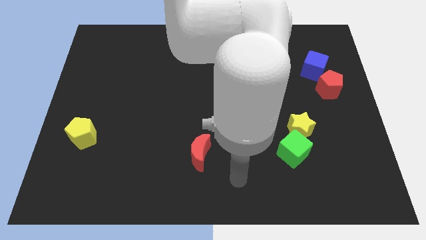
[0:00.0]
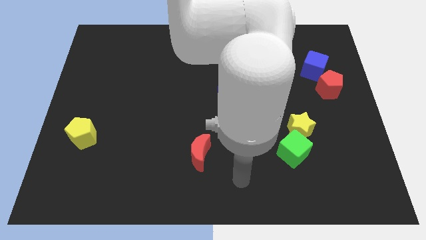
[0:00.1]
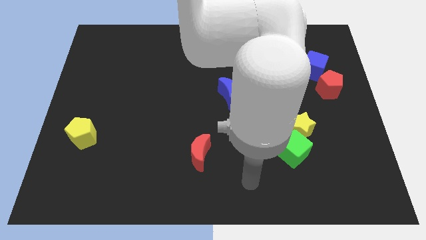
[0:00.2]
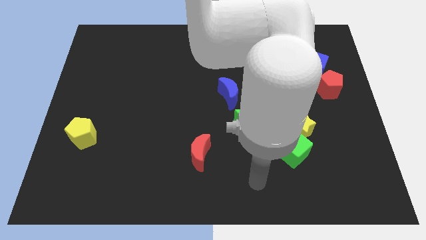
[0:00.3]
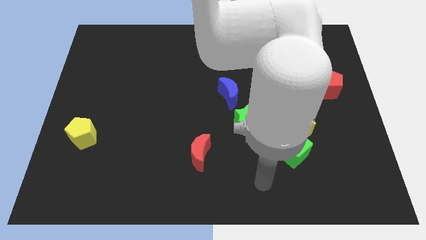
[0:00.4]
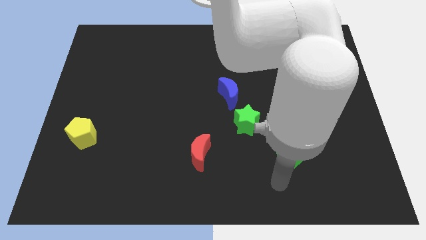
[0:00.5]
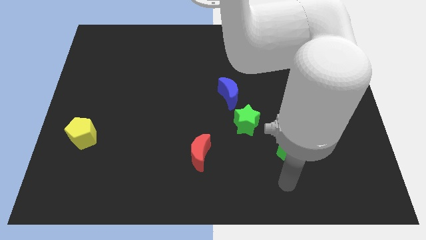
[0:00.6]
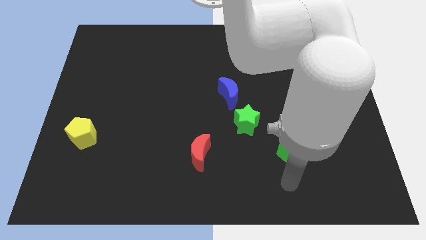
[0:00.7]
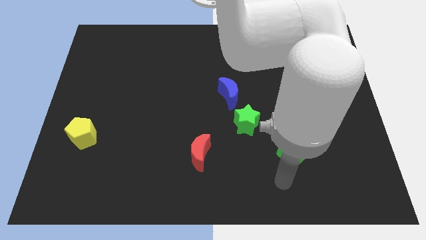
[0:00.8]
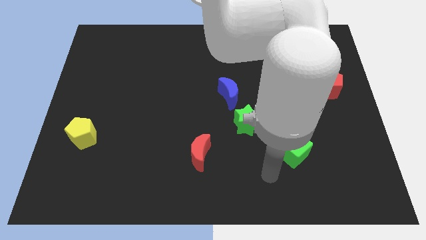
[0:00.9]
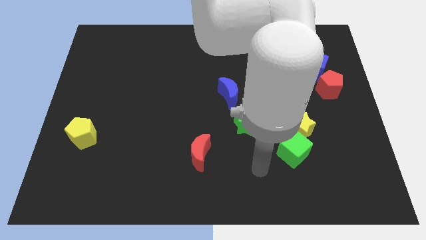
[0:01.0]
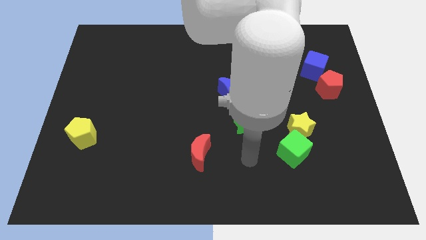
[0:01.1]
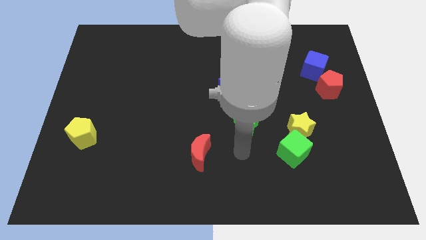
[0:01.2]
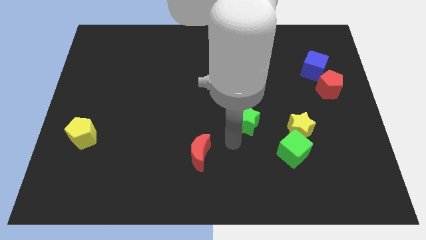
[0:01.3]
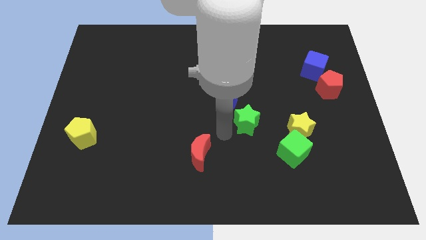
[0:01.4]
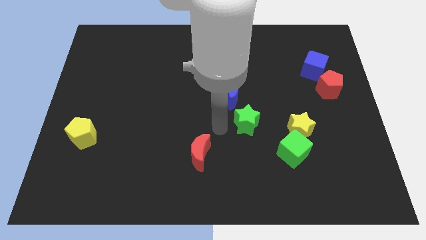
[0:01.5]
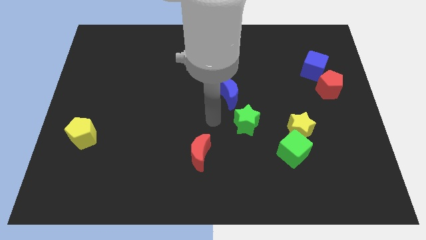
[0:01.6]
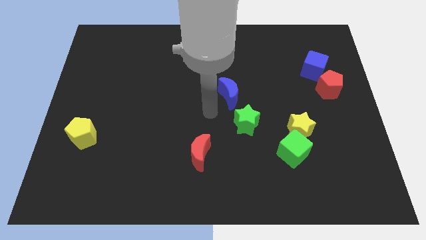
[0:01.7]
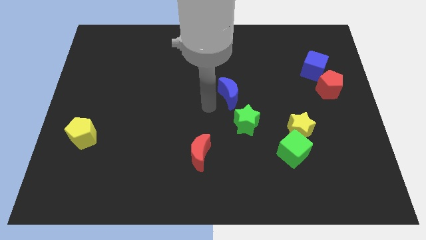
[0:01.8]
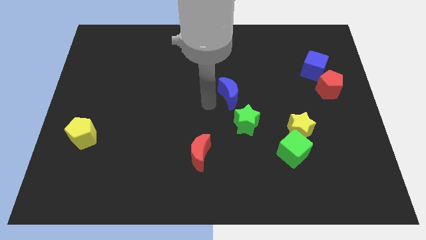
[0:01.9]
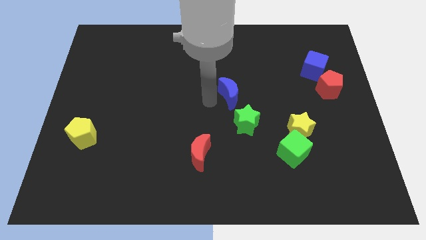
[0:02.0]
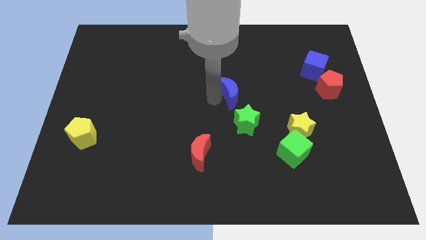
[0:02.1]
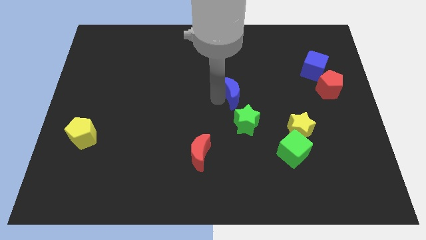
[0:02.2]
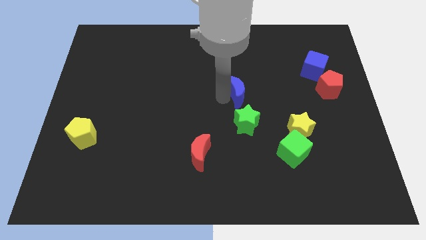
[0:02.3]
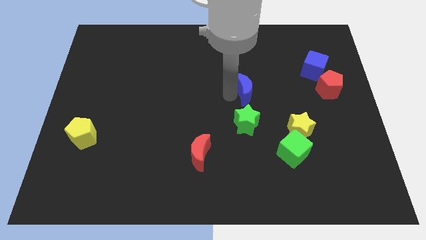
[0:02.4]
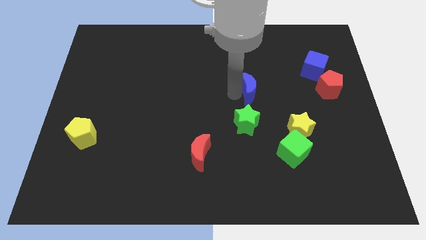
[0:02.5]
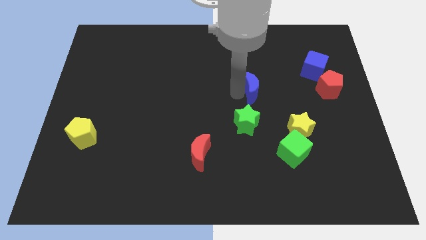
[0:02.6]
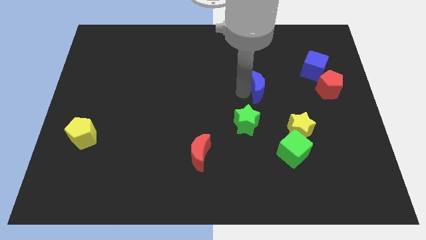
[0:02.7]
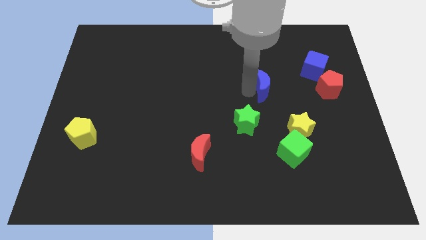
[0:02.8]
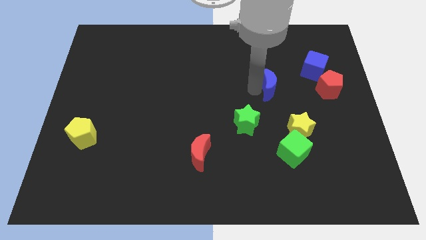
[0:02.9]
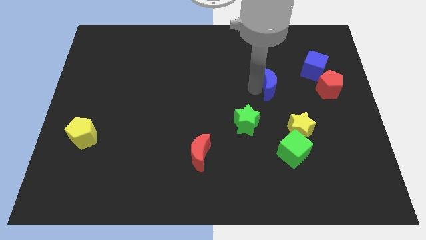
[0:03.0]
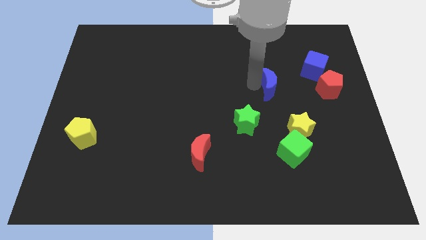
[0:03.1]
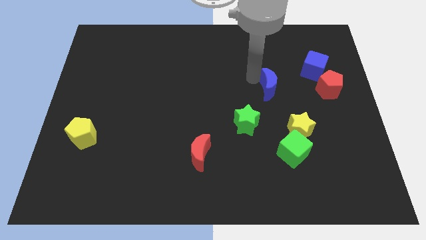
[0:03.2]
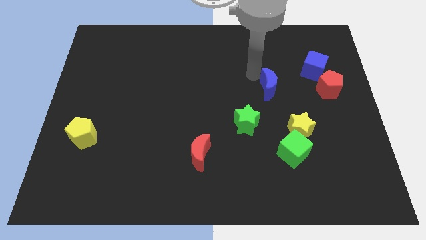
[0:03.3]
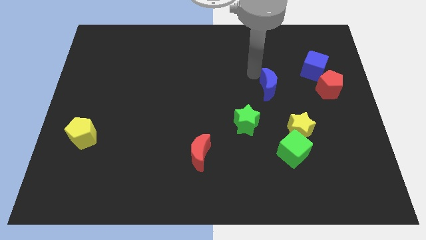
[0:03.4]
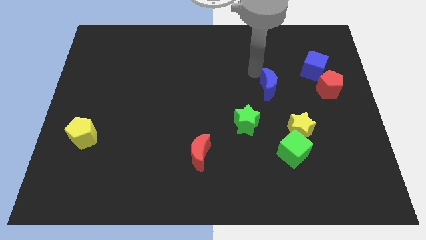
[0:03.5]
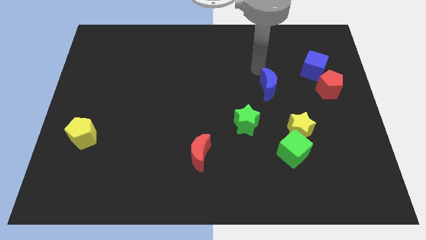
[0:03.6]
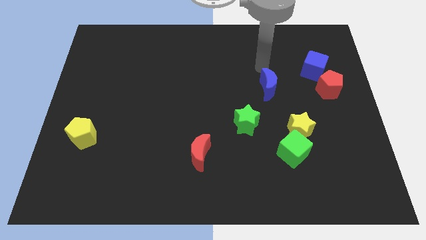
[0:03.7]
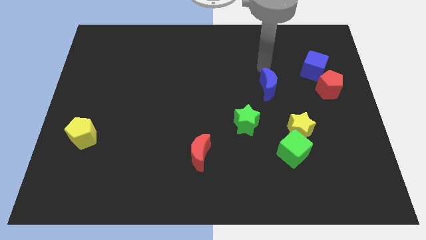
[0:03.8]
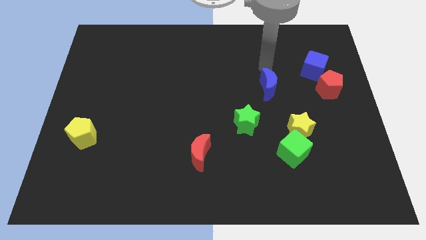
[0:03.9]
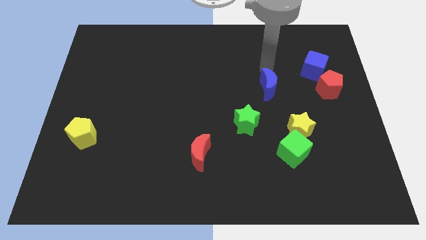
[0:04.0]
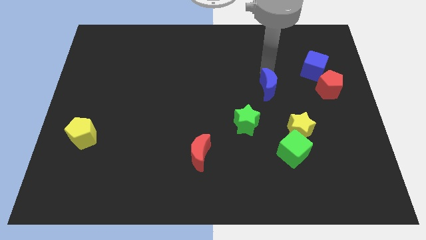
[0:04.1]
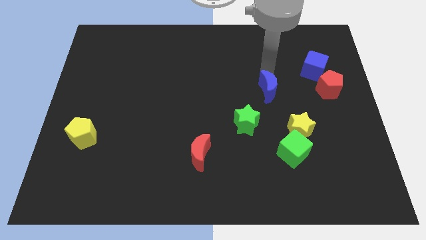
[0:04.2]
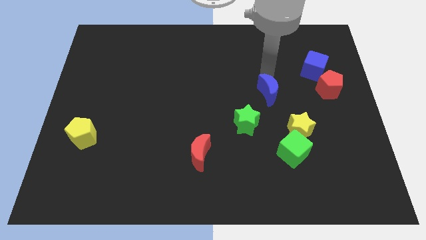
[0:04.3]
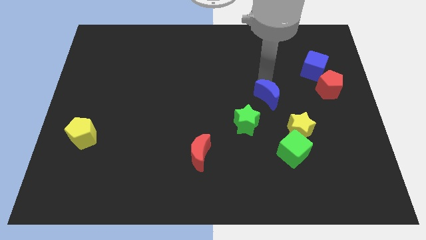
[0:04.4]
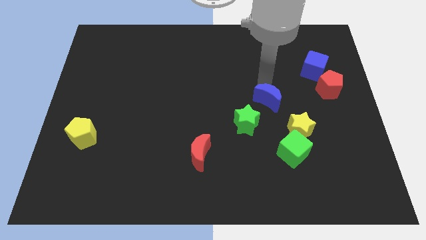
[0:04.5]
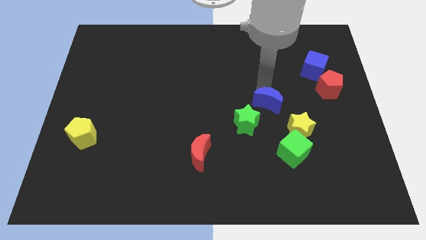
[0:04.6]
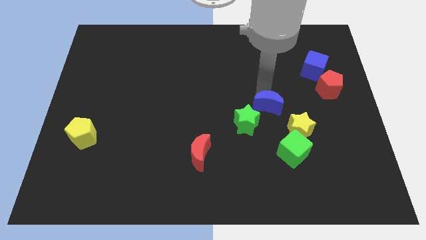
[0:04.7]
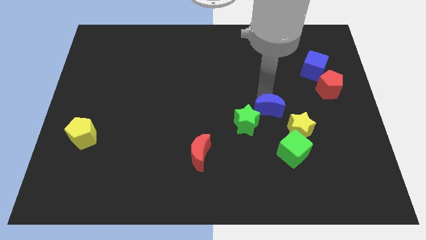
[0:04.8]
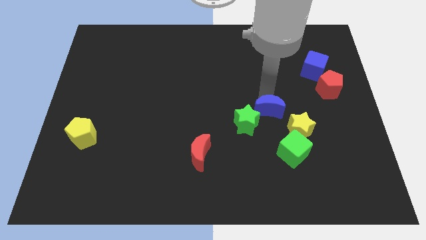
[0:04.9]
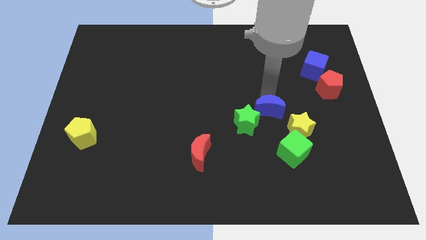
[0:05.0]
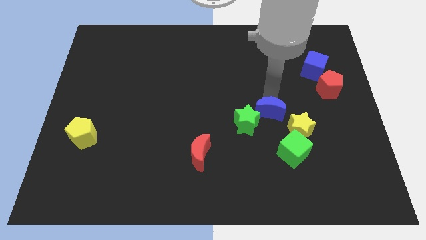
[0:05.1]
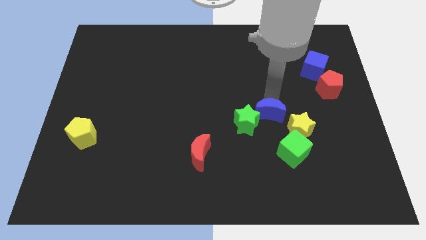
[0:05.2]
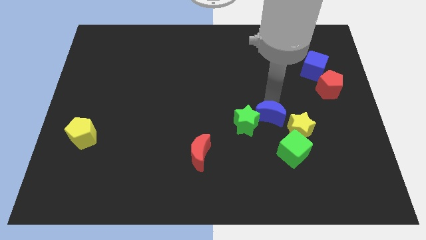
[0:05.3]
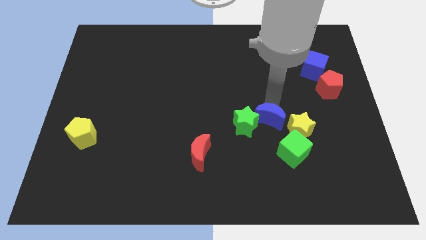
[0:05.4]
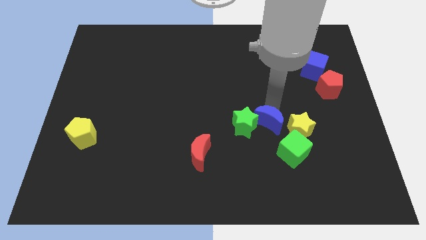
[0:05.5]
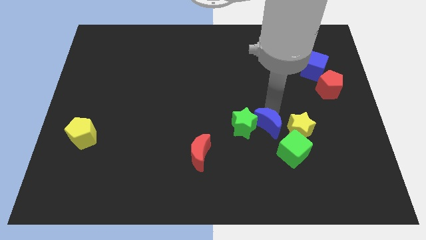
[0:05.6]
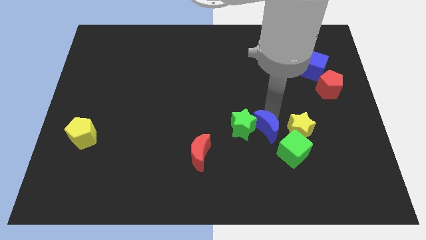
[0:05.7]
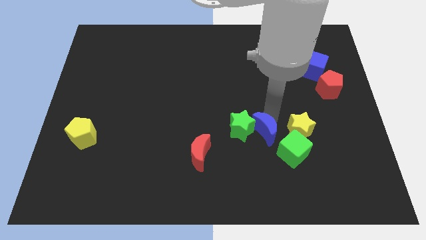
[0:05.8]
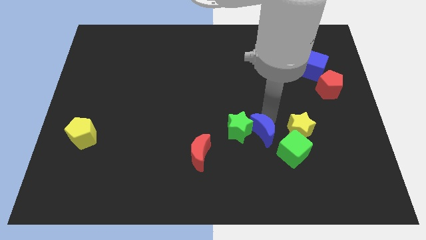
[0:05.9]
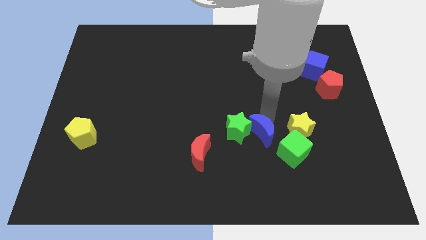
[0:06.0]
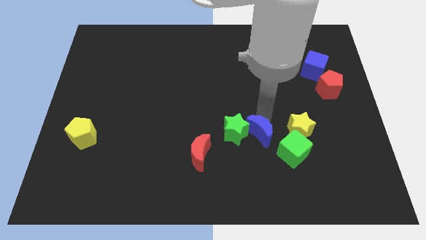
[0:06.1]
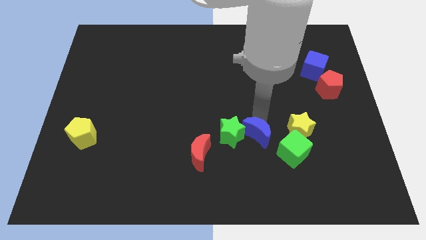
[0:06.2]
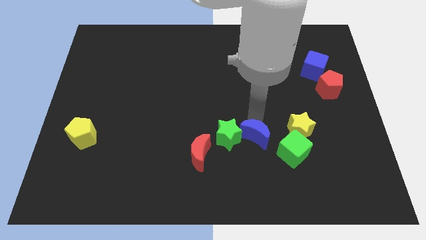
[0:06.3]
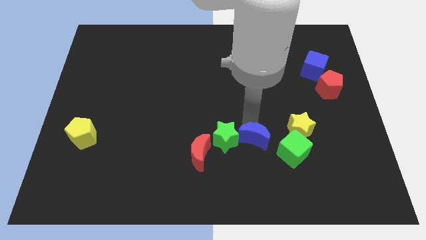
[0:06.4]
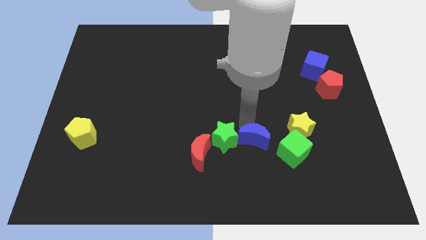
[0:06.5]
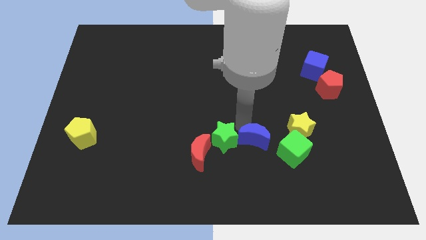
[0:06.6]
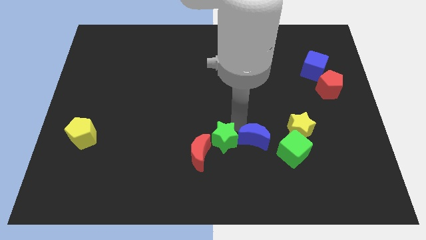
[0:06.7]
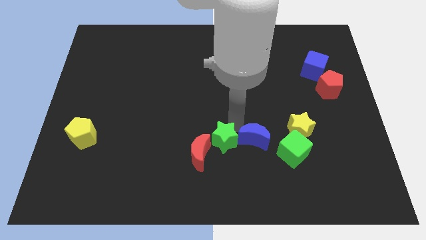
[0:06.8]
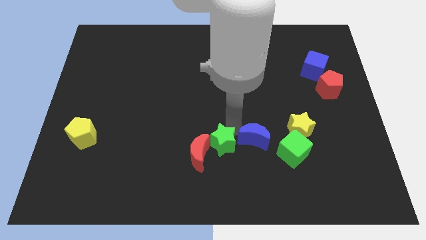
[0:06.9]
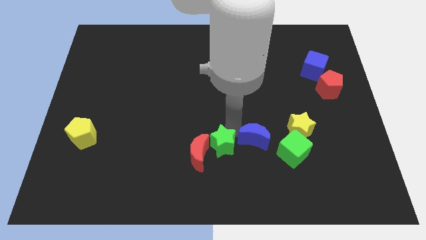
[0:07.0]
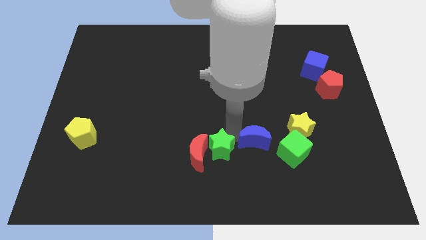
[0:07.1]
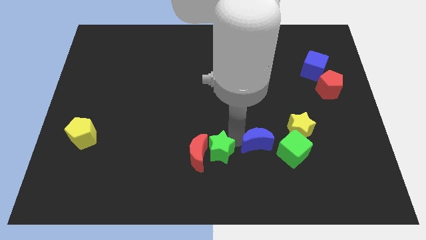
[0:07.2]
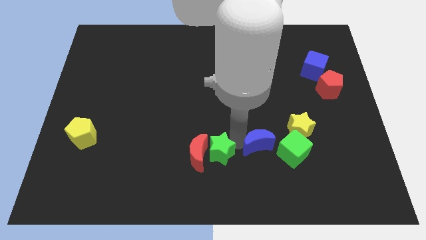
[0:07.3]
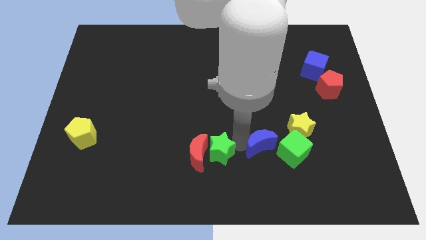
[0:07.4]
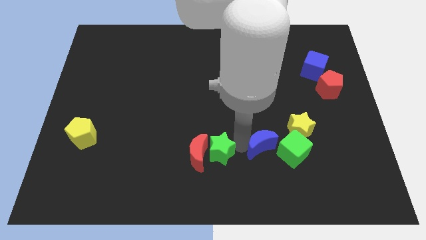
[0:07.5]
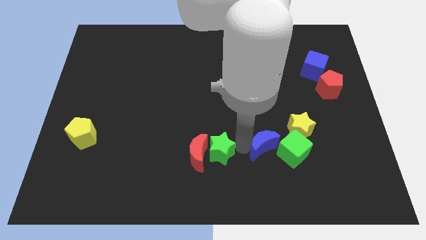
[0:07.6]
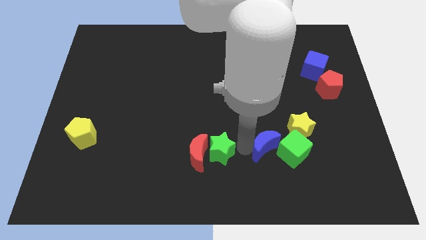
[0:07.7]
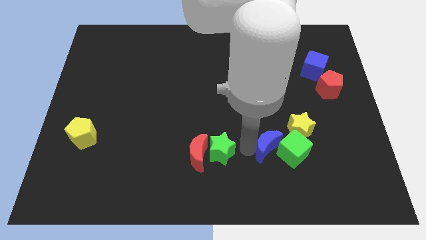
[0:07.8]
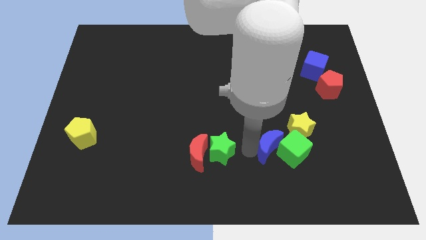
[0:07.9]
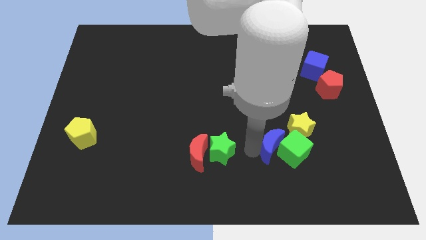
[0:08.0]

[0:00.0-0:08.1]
slide the blue moon towards the green cube
